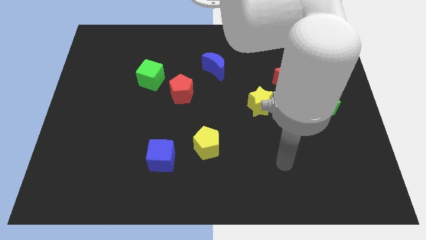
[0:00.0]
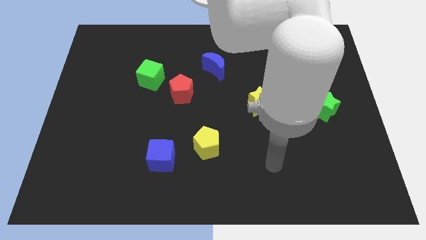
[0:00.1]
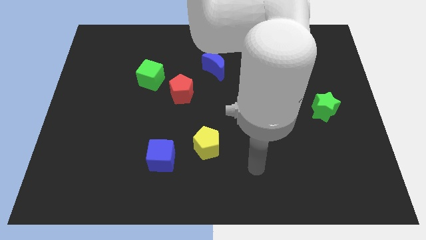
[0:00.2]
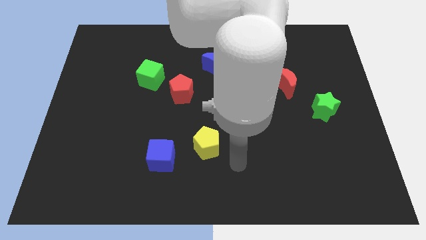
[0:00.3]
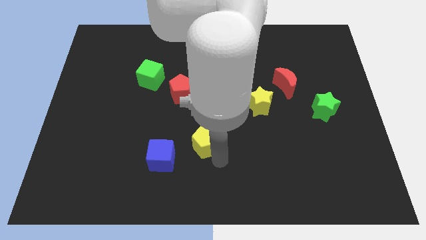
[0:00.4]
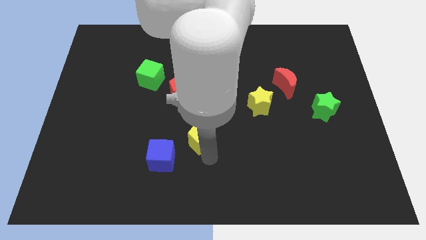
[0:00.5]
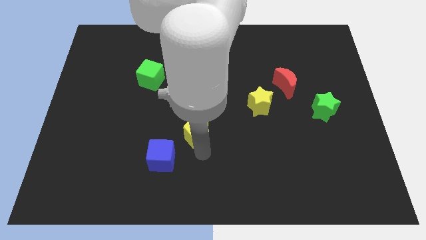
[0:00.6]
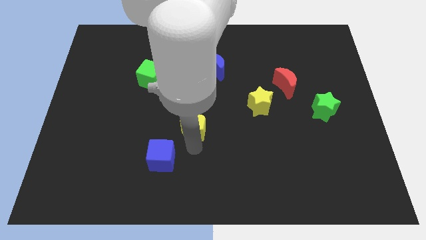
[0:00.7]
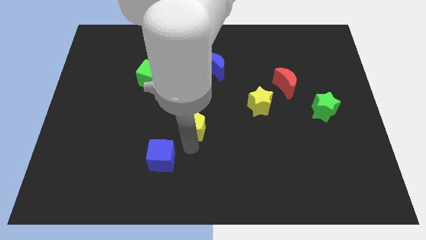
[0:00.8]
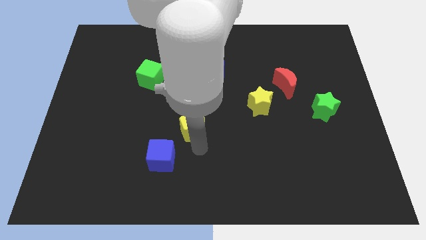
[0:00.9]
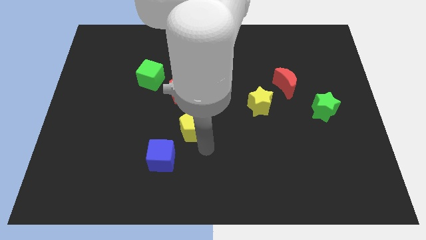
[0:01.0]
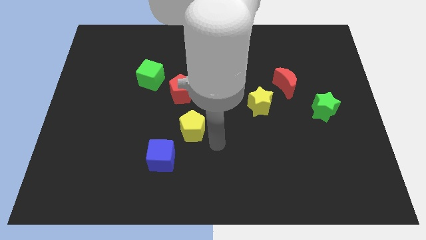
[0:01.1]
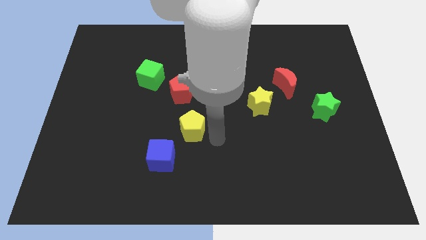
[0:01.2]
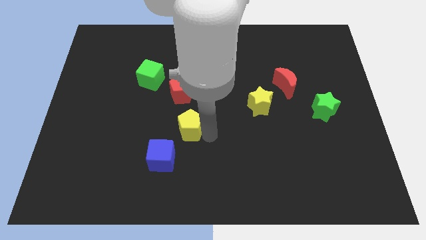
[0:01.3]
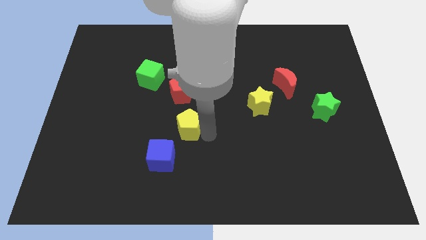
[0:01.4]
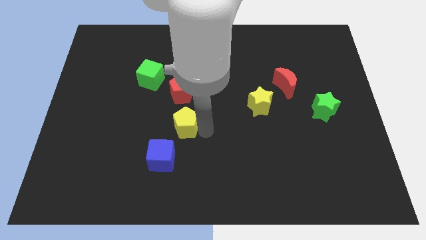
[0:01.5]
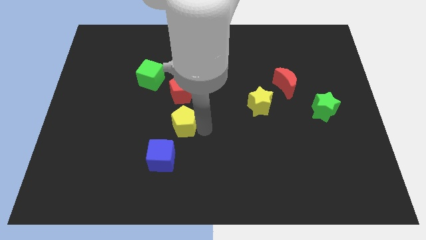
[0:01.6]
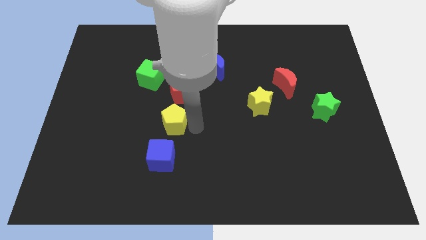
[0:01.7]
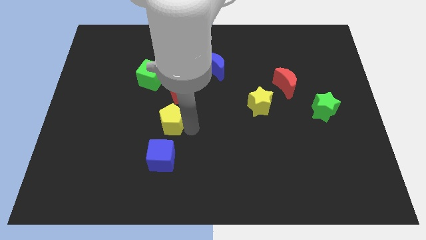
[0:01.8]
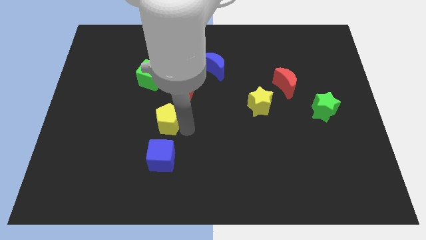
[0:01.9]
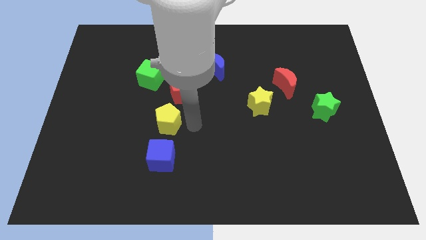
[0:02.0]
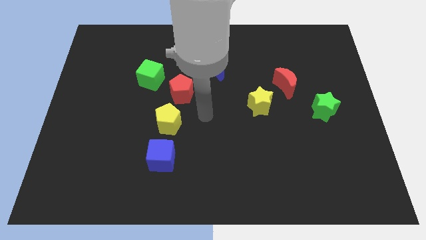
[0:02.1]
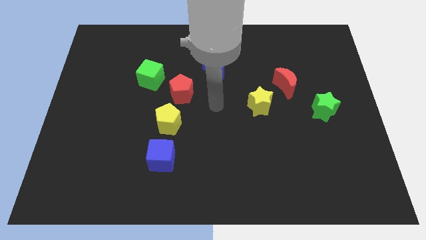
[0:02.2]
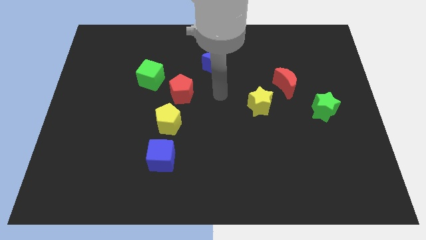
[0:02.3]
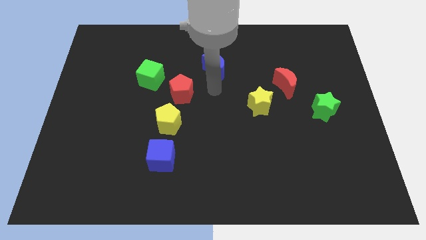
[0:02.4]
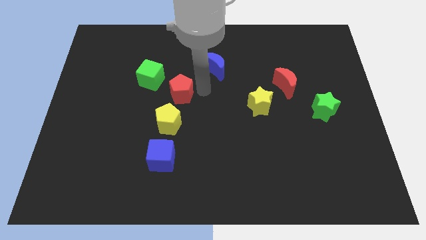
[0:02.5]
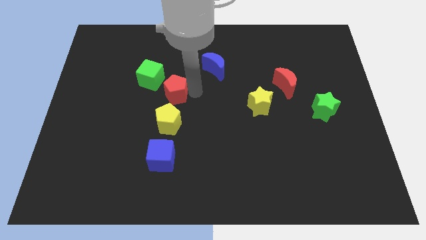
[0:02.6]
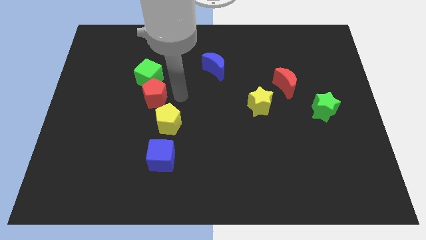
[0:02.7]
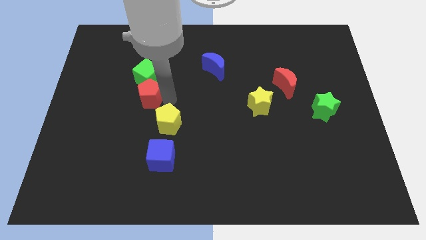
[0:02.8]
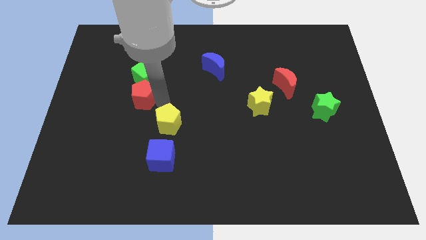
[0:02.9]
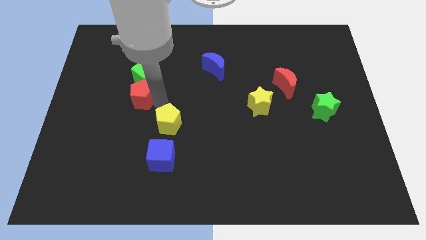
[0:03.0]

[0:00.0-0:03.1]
push the yellow pentagon and the red pentagon towards the center left

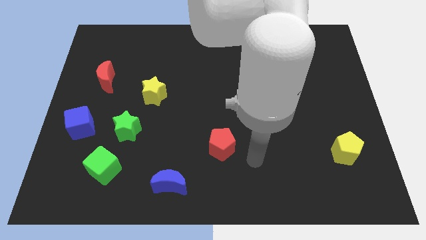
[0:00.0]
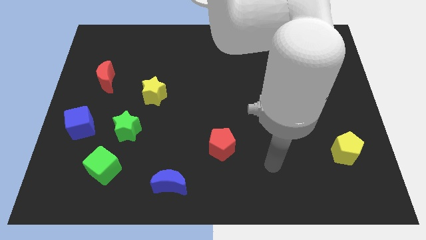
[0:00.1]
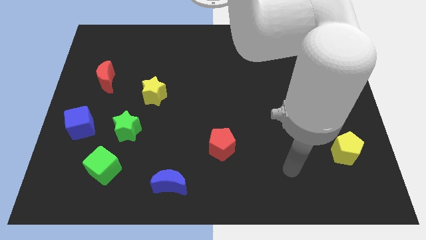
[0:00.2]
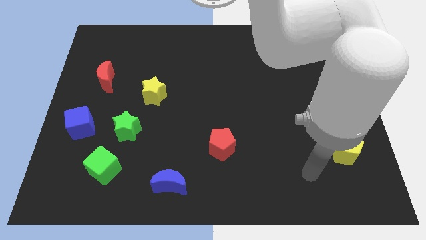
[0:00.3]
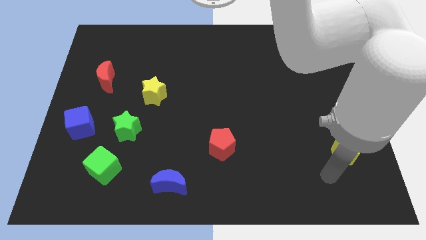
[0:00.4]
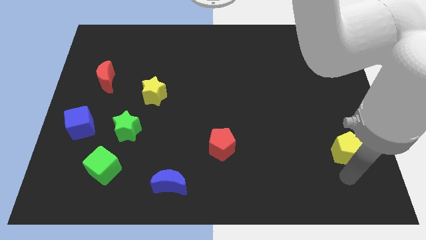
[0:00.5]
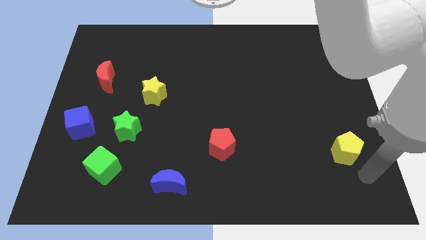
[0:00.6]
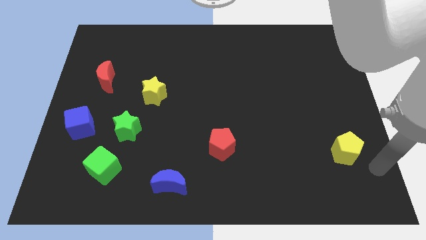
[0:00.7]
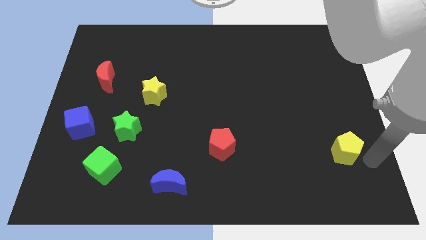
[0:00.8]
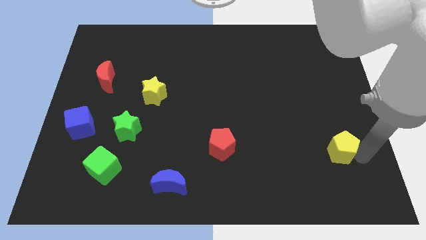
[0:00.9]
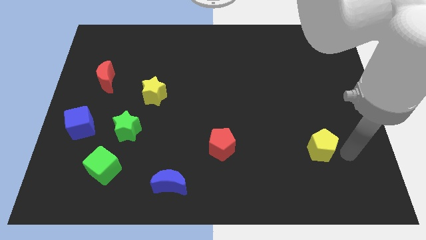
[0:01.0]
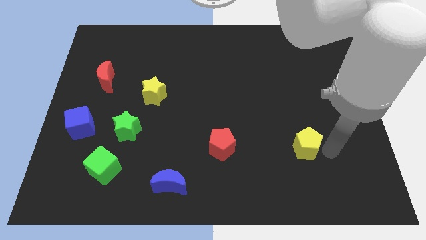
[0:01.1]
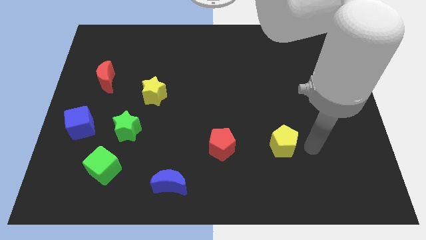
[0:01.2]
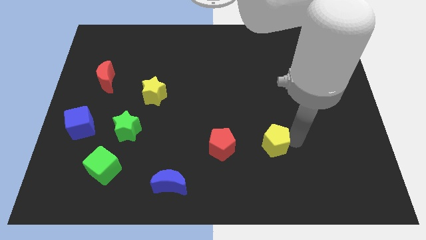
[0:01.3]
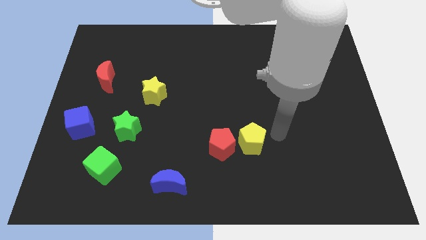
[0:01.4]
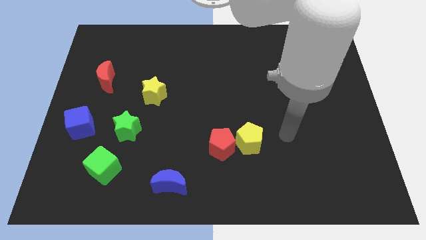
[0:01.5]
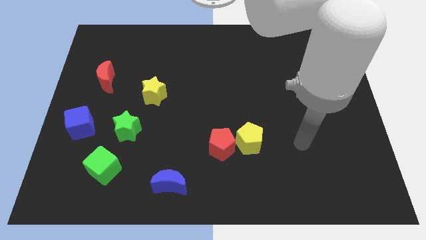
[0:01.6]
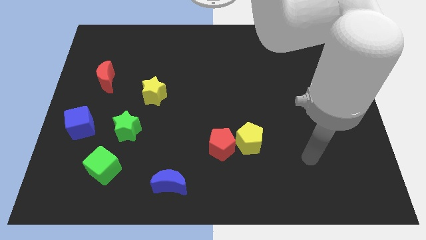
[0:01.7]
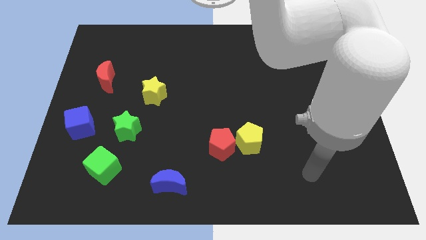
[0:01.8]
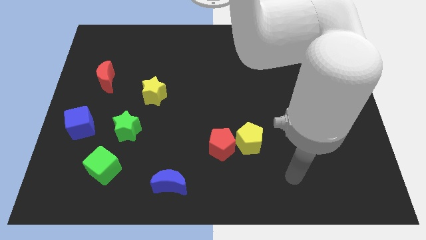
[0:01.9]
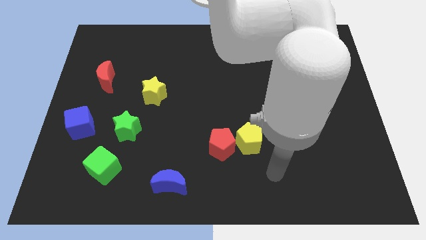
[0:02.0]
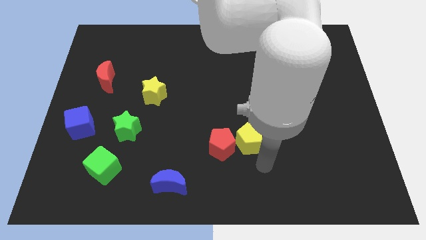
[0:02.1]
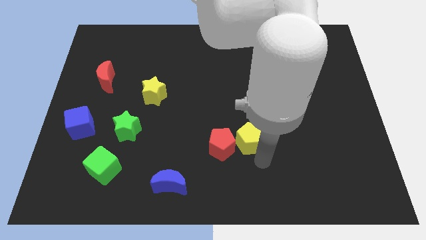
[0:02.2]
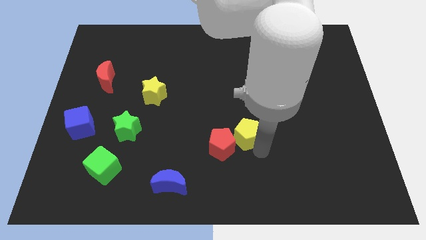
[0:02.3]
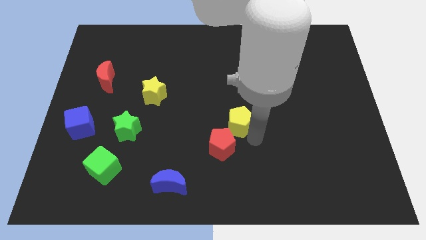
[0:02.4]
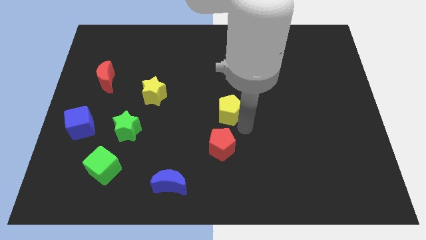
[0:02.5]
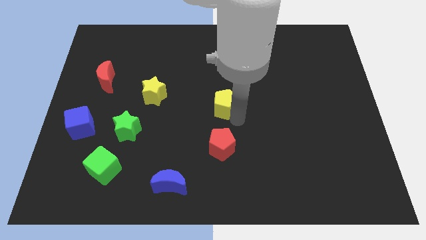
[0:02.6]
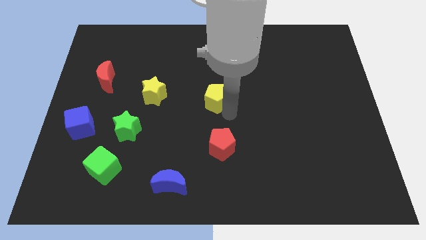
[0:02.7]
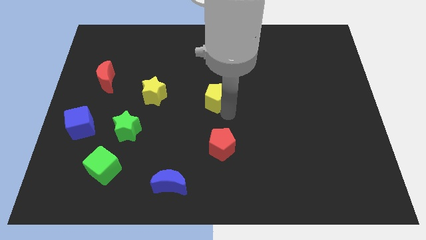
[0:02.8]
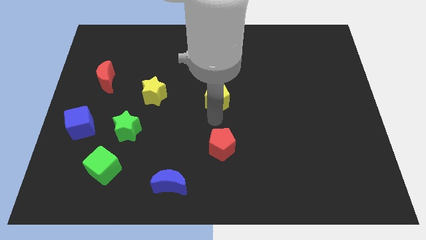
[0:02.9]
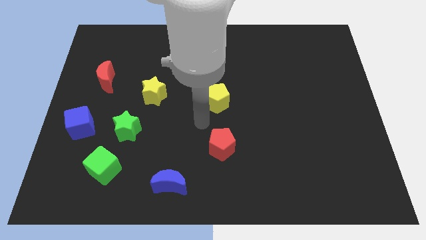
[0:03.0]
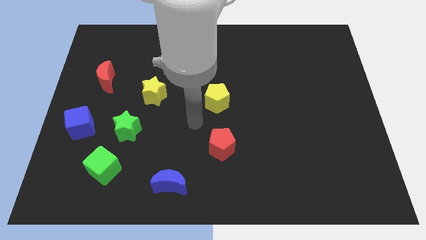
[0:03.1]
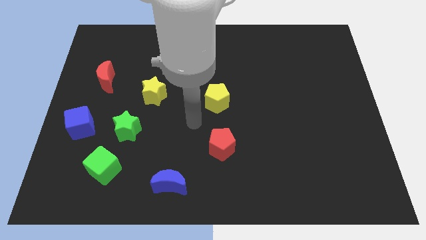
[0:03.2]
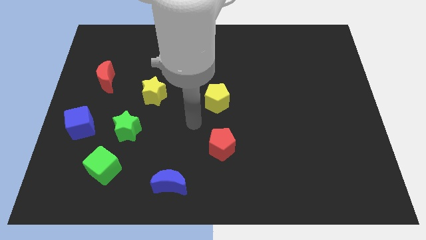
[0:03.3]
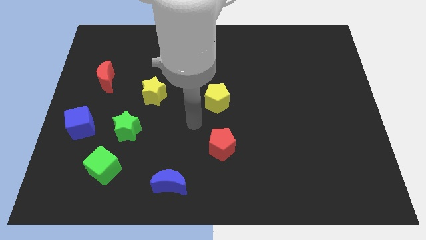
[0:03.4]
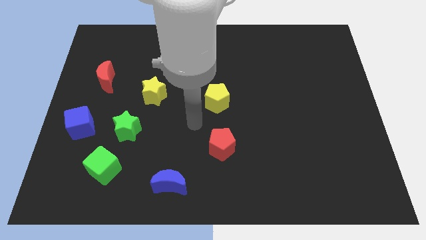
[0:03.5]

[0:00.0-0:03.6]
place the yellow pentagon above the red pentagon

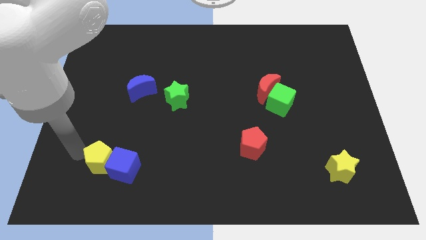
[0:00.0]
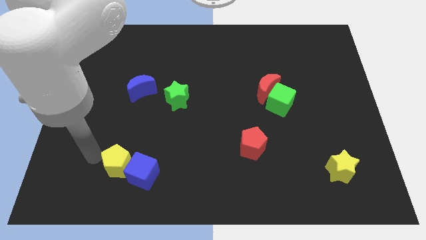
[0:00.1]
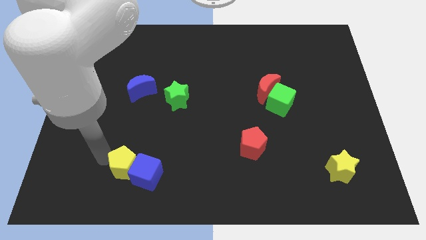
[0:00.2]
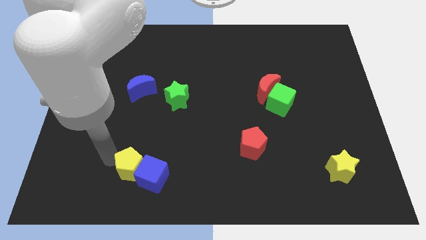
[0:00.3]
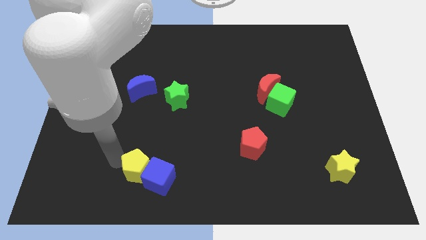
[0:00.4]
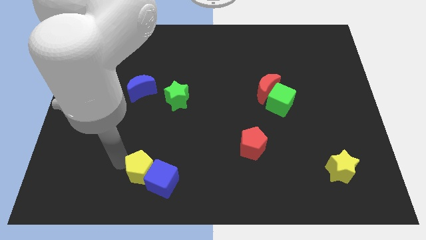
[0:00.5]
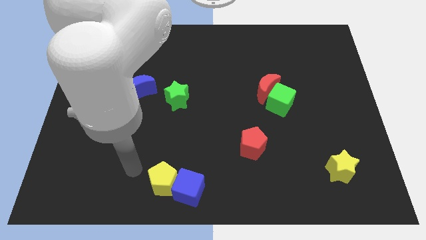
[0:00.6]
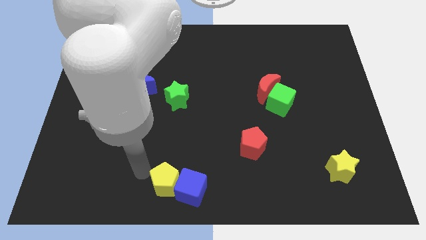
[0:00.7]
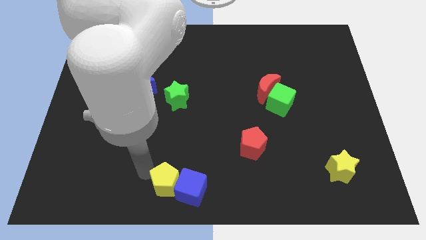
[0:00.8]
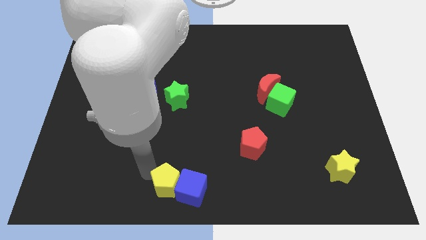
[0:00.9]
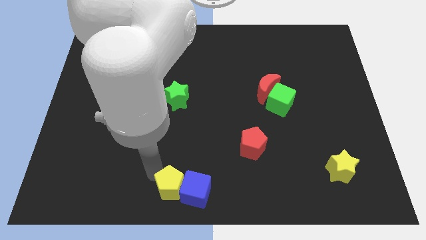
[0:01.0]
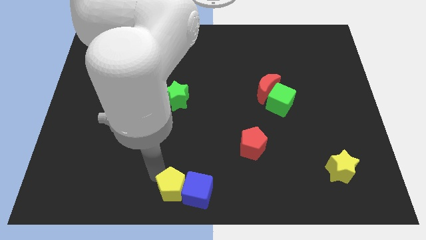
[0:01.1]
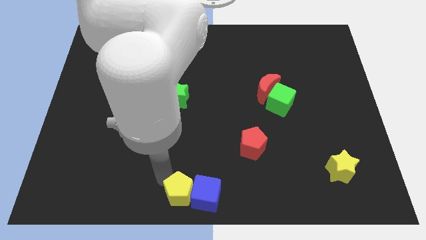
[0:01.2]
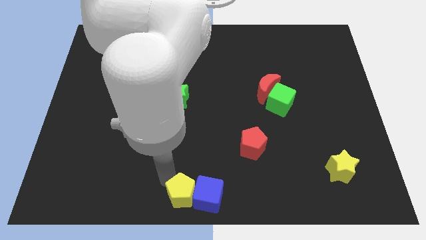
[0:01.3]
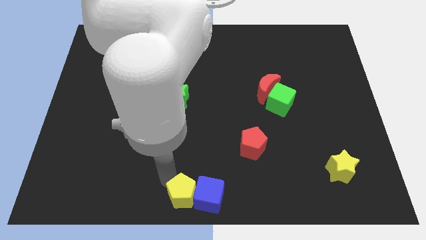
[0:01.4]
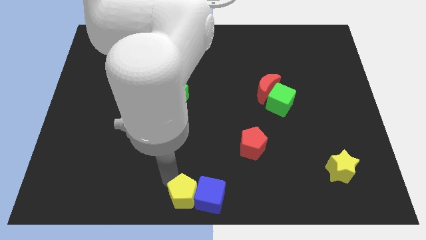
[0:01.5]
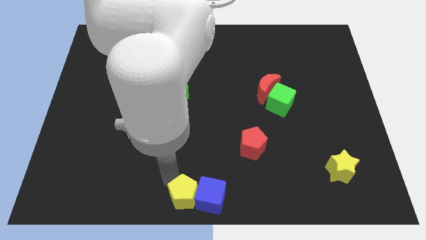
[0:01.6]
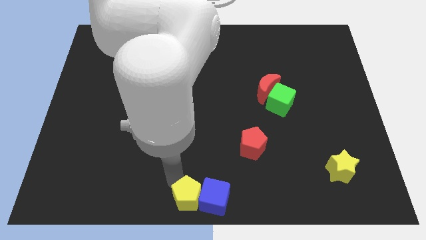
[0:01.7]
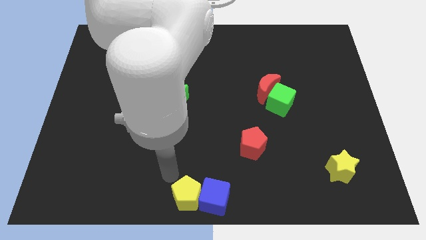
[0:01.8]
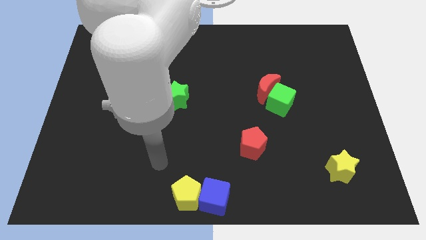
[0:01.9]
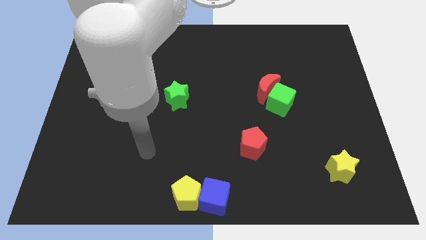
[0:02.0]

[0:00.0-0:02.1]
push the yellow pentagon and blue moon towards the bottom center of the board
